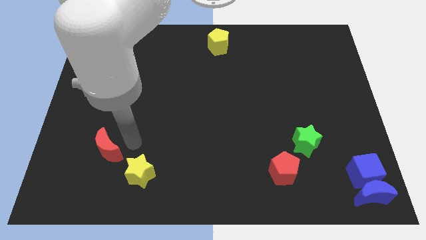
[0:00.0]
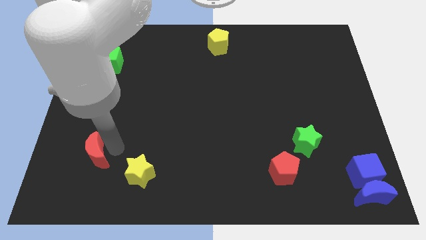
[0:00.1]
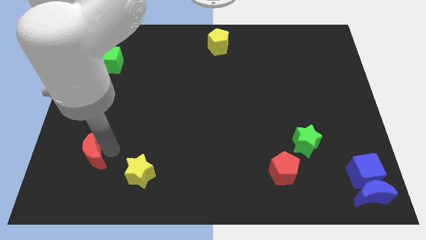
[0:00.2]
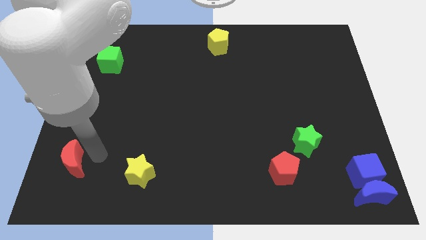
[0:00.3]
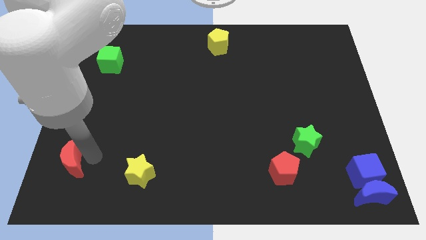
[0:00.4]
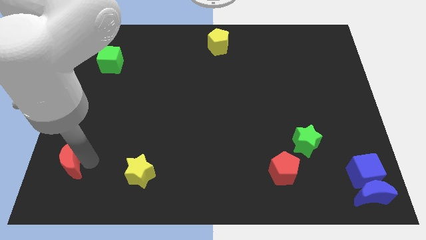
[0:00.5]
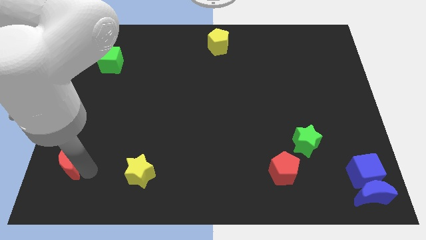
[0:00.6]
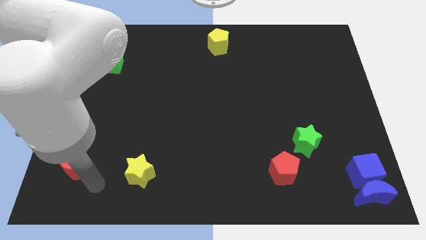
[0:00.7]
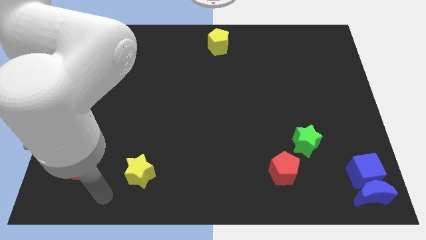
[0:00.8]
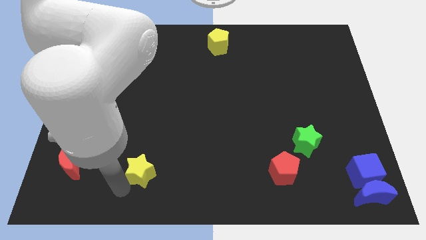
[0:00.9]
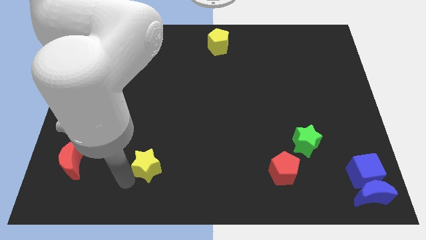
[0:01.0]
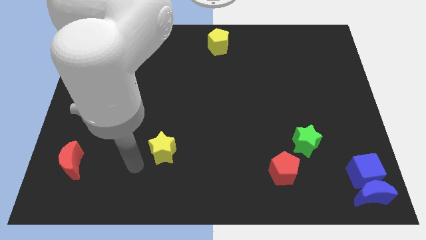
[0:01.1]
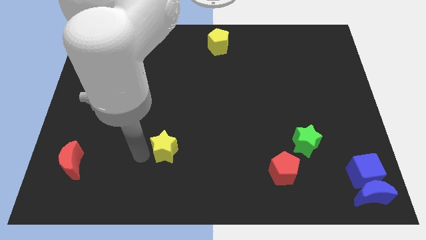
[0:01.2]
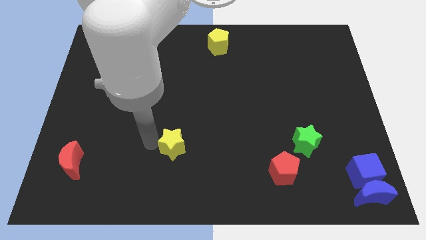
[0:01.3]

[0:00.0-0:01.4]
separate red moon and yellow star

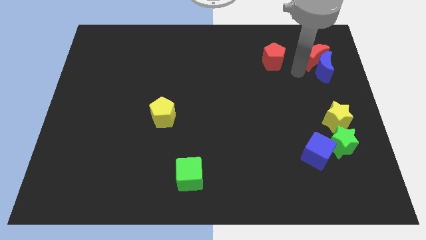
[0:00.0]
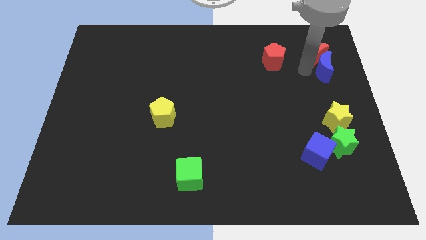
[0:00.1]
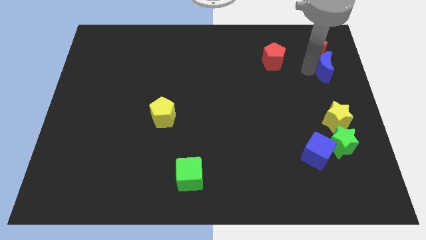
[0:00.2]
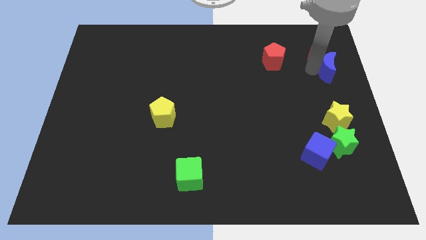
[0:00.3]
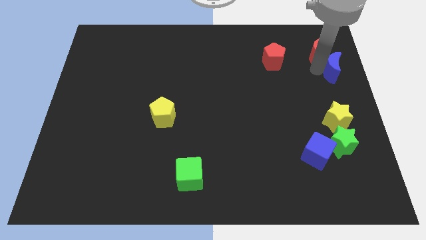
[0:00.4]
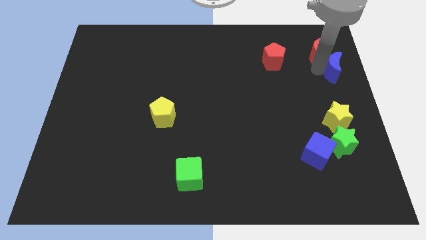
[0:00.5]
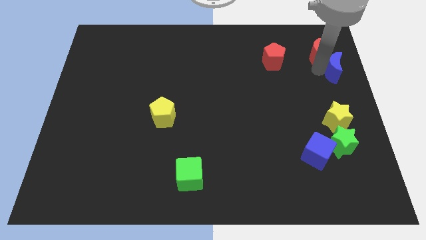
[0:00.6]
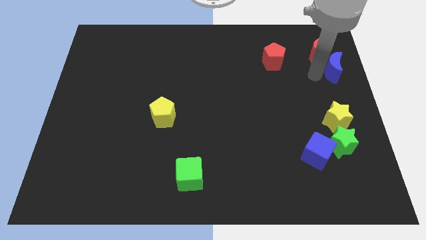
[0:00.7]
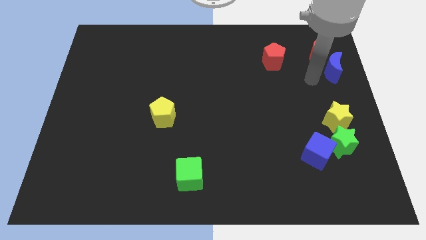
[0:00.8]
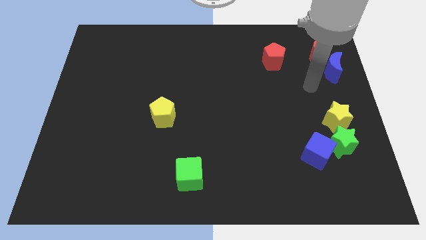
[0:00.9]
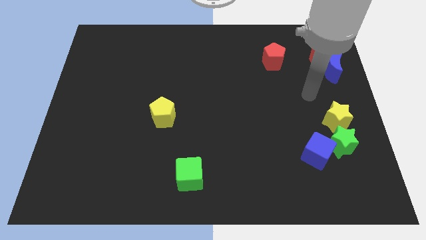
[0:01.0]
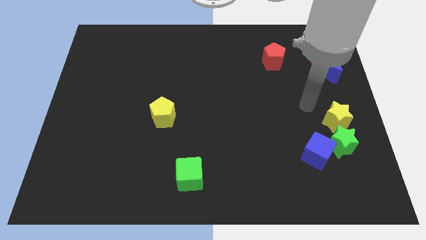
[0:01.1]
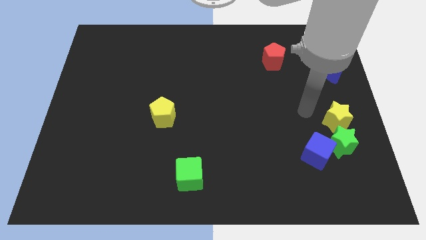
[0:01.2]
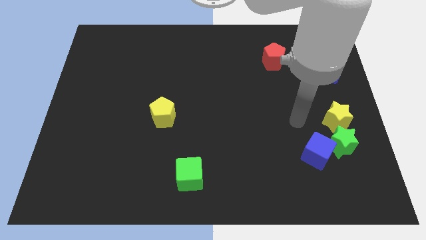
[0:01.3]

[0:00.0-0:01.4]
push red moon slightly towards right center

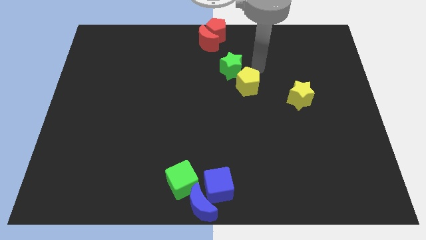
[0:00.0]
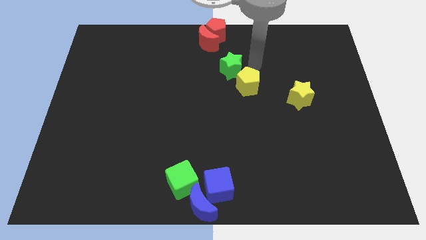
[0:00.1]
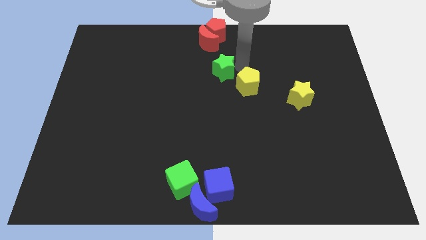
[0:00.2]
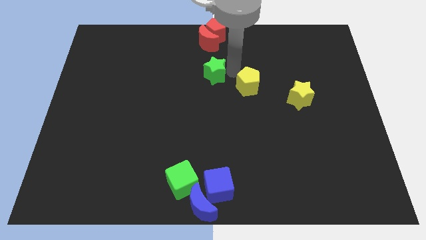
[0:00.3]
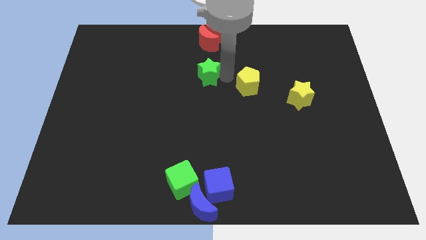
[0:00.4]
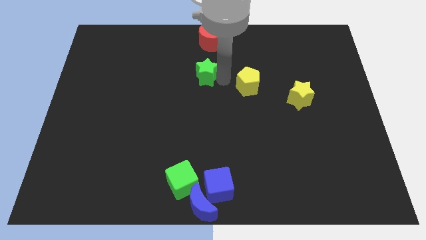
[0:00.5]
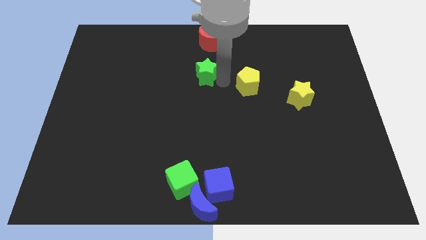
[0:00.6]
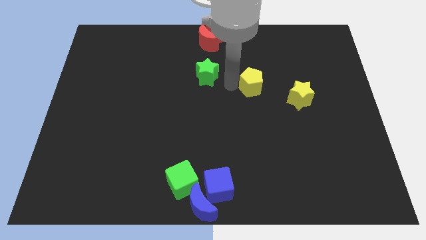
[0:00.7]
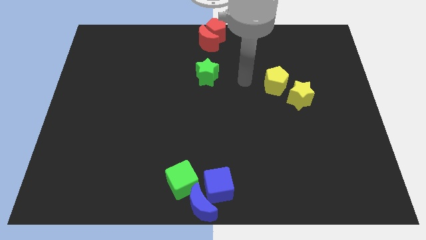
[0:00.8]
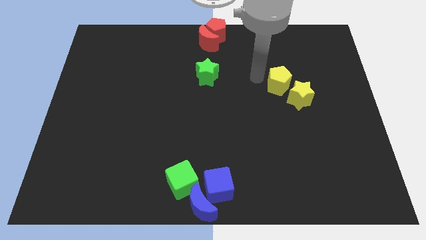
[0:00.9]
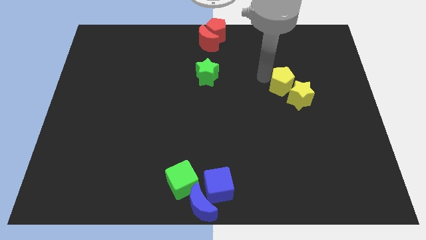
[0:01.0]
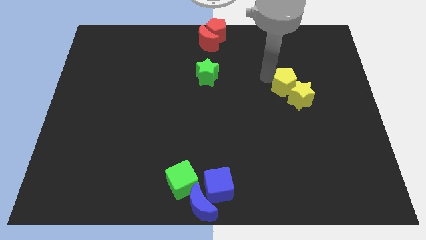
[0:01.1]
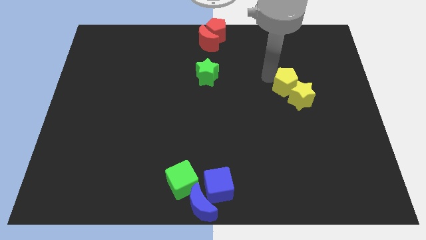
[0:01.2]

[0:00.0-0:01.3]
push the yellow pentagon into the yellow star

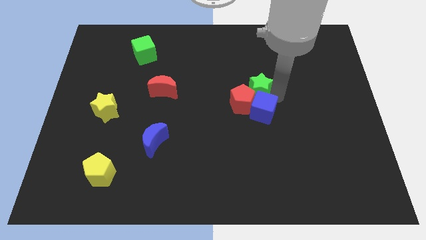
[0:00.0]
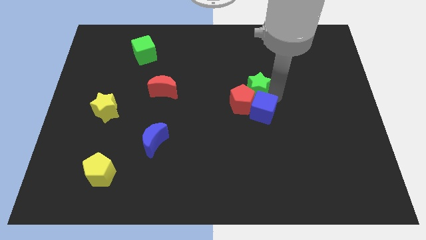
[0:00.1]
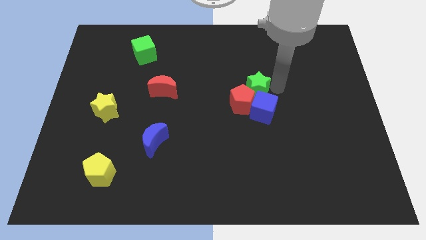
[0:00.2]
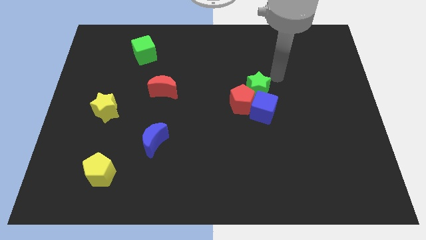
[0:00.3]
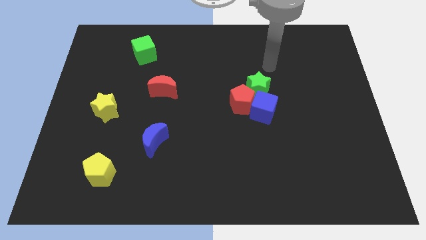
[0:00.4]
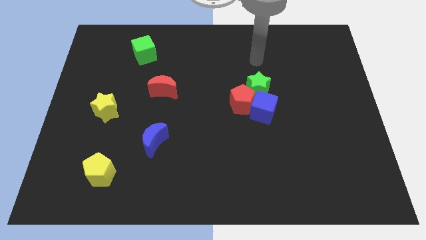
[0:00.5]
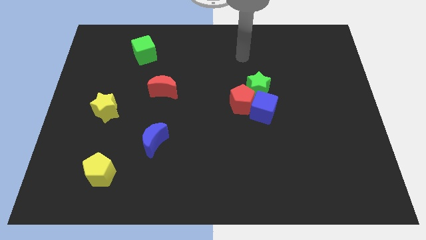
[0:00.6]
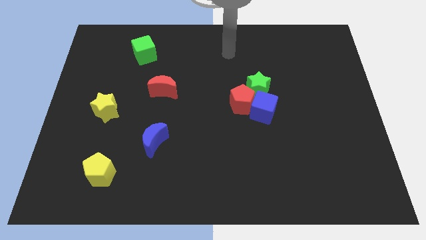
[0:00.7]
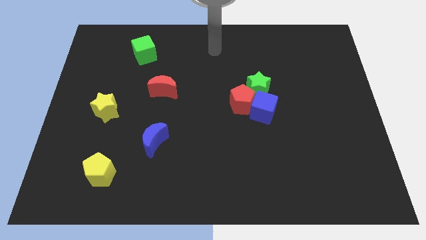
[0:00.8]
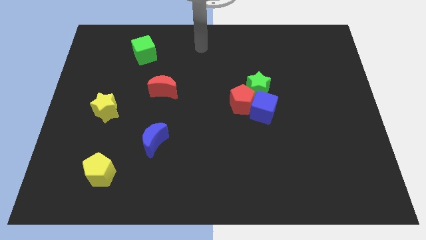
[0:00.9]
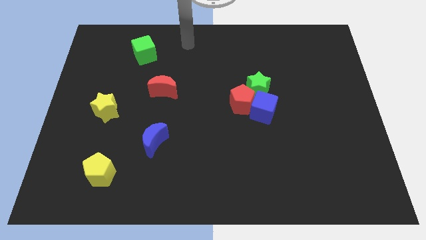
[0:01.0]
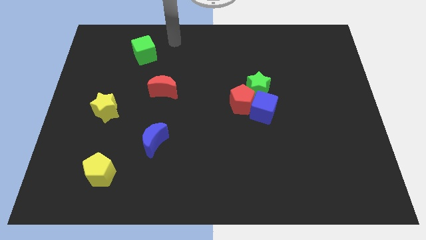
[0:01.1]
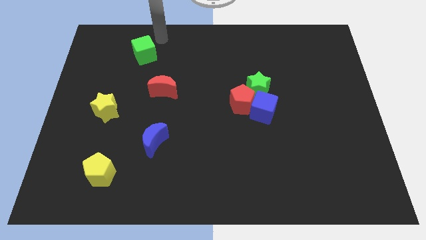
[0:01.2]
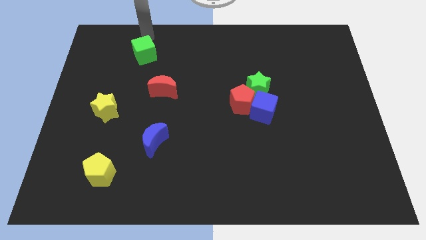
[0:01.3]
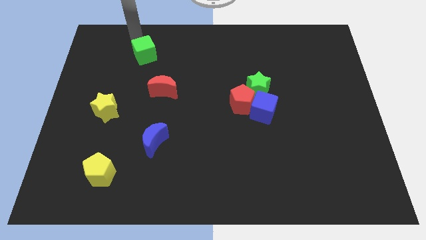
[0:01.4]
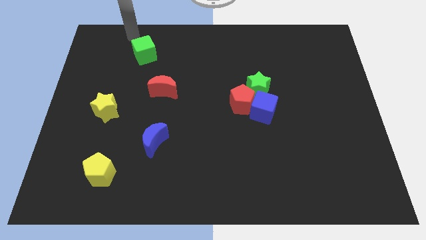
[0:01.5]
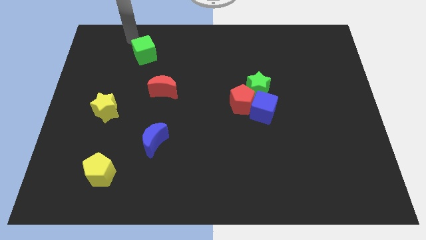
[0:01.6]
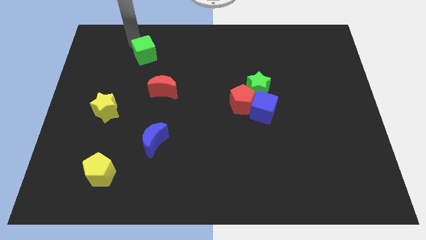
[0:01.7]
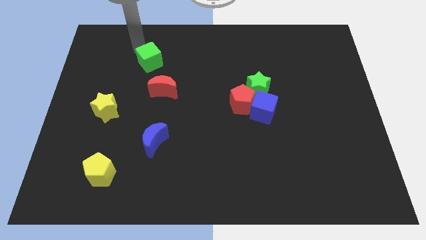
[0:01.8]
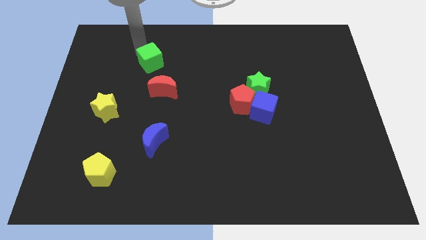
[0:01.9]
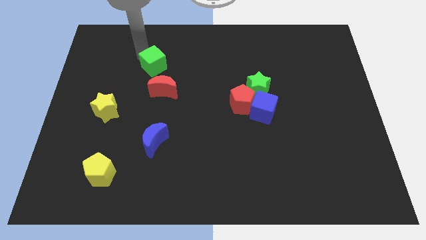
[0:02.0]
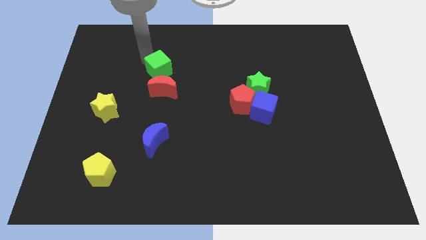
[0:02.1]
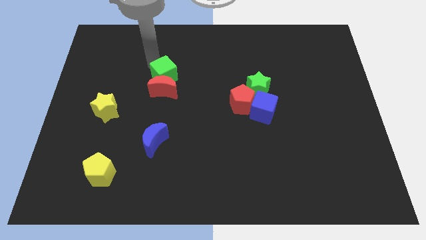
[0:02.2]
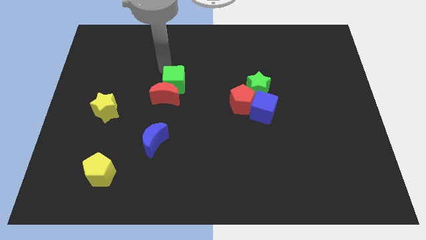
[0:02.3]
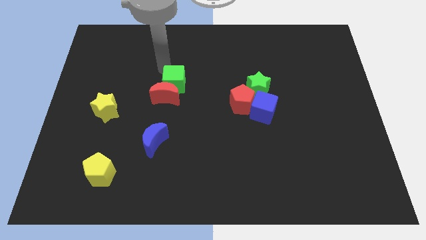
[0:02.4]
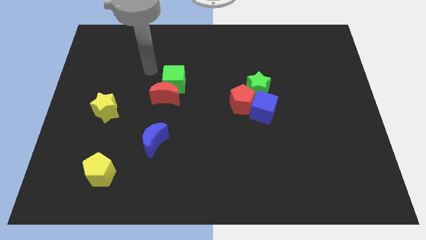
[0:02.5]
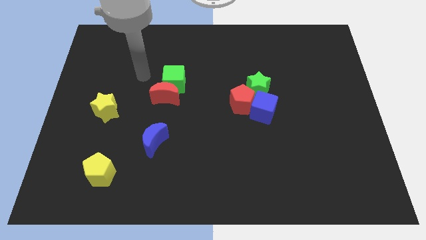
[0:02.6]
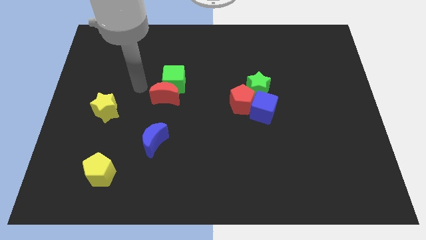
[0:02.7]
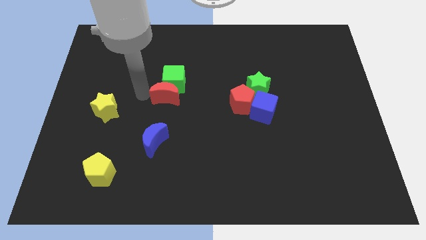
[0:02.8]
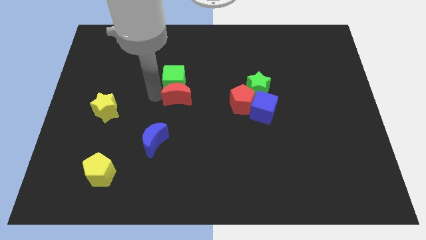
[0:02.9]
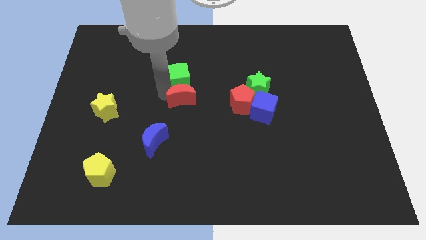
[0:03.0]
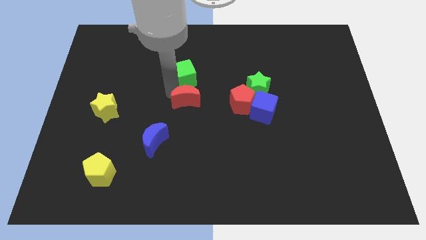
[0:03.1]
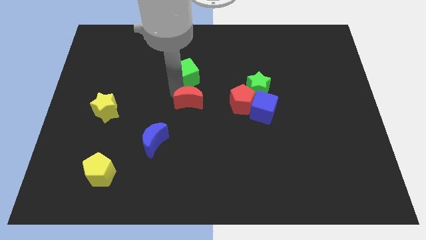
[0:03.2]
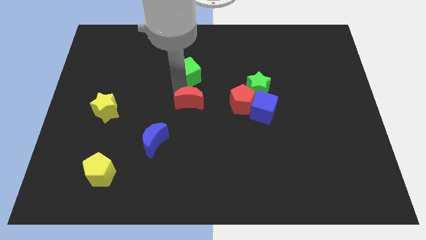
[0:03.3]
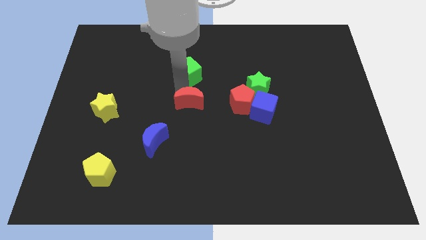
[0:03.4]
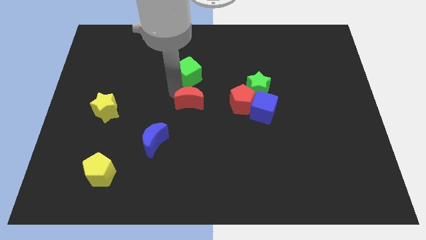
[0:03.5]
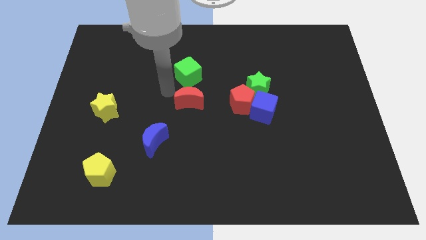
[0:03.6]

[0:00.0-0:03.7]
slide the green cube and red crescent towards the left side of the group of blocks

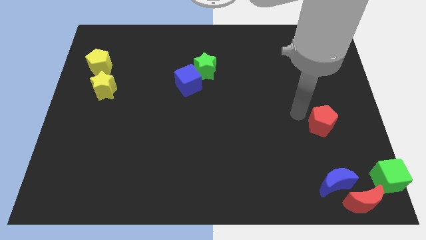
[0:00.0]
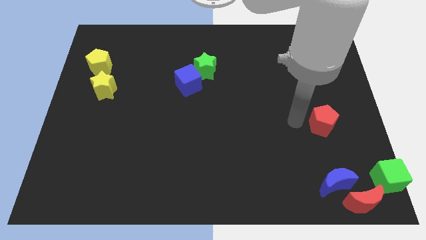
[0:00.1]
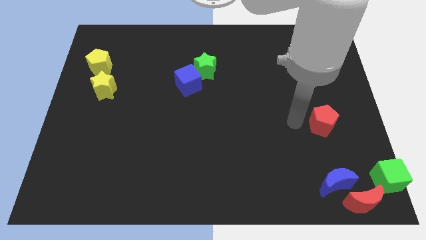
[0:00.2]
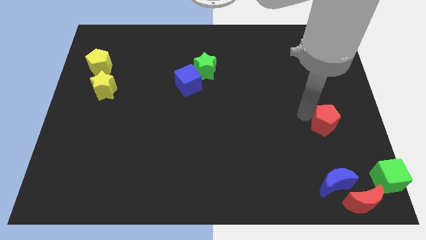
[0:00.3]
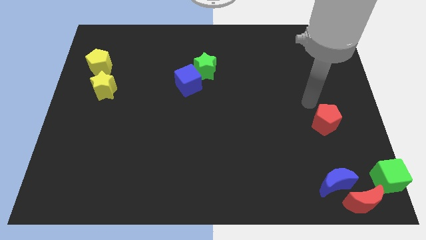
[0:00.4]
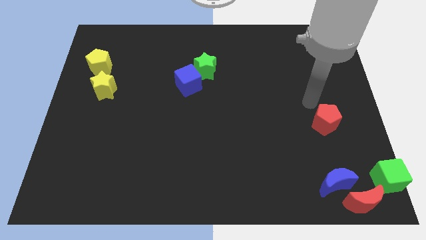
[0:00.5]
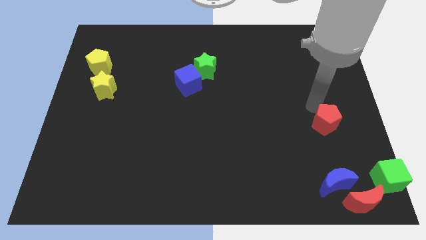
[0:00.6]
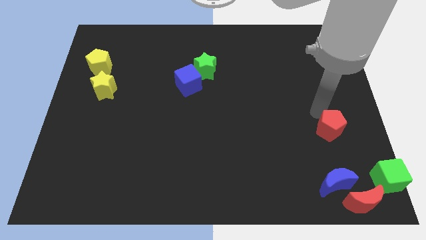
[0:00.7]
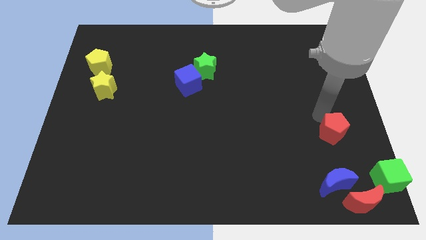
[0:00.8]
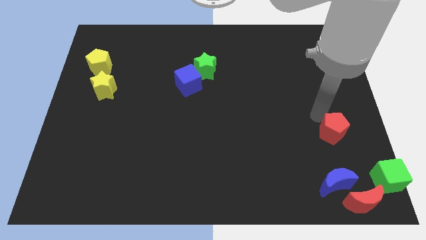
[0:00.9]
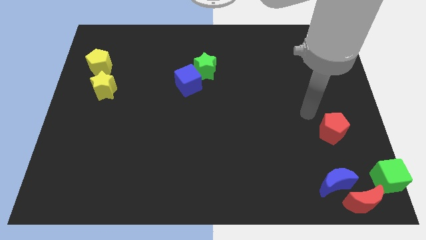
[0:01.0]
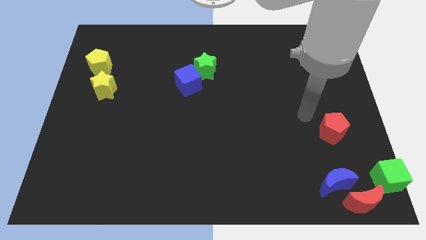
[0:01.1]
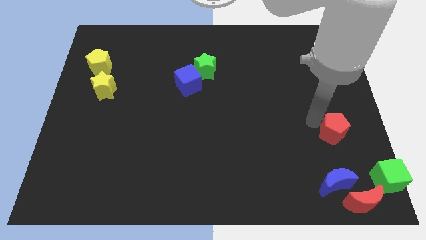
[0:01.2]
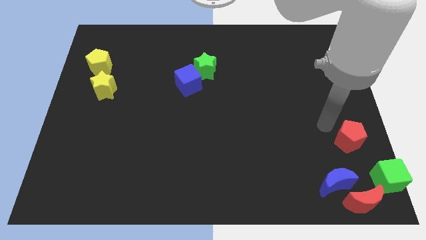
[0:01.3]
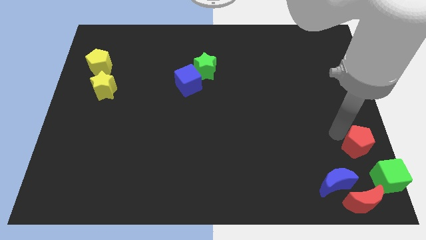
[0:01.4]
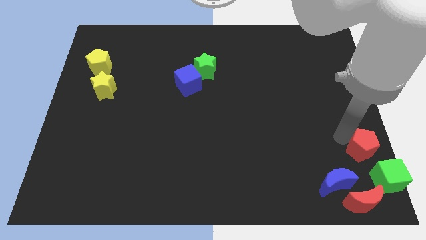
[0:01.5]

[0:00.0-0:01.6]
push the red pentagon towards the green cube
